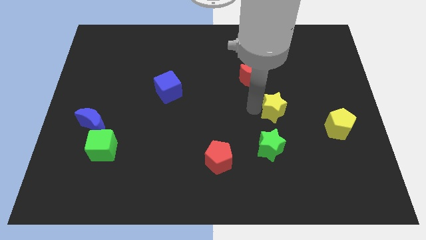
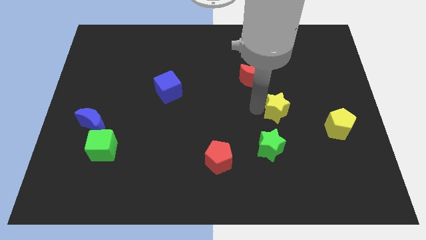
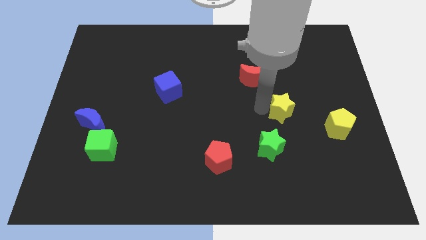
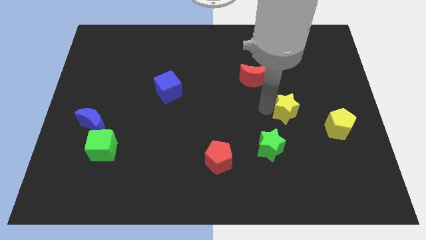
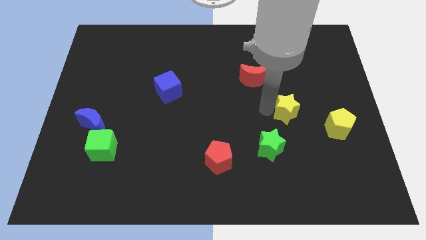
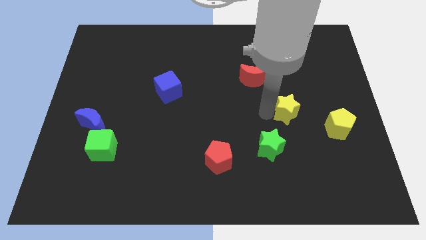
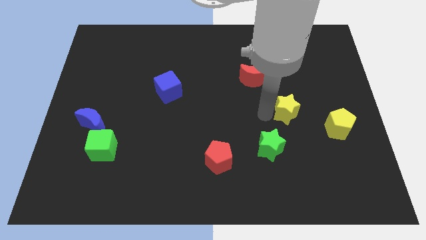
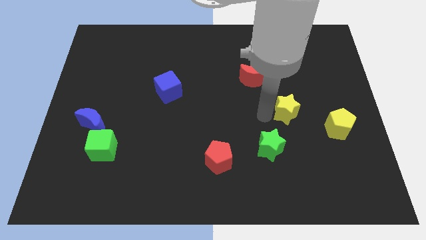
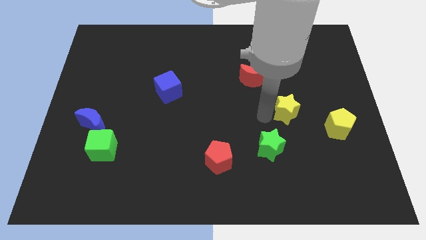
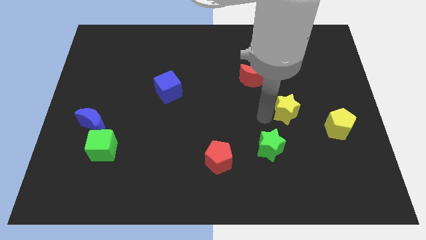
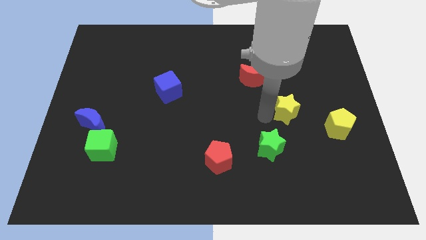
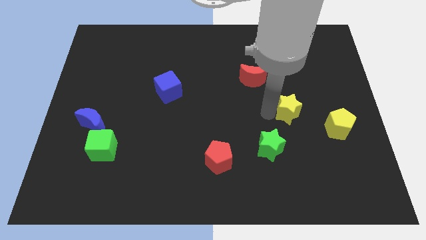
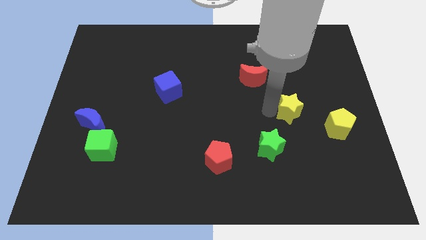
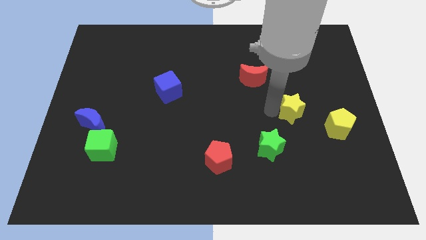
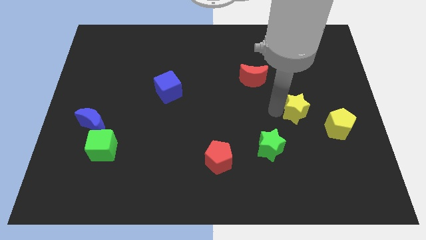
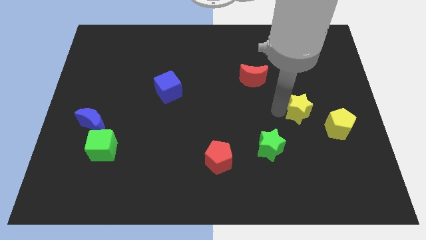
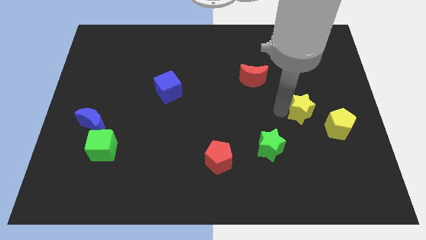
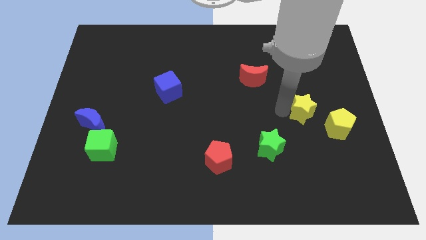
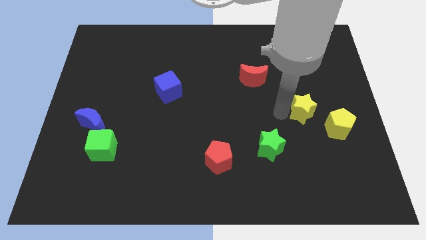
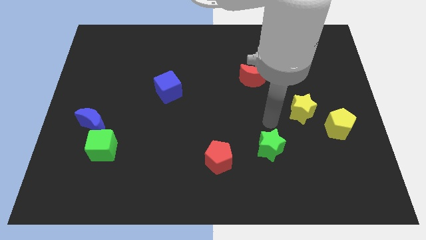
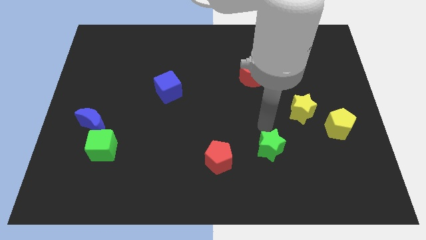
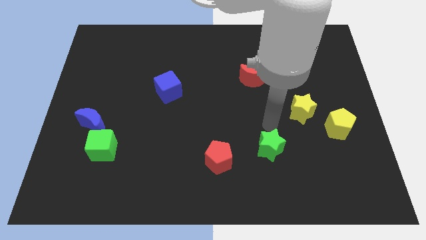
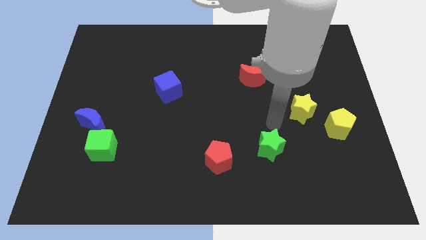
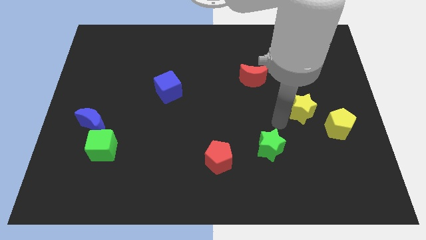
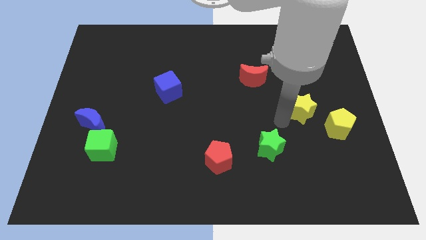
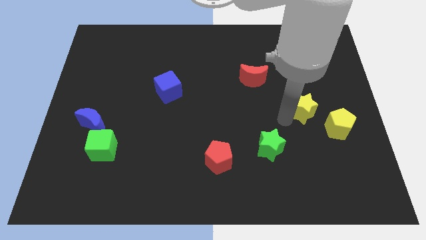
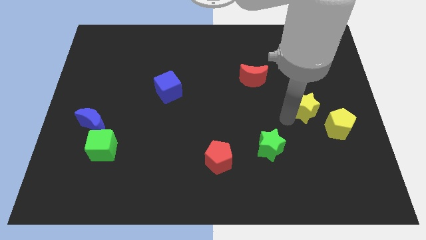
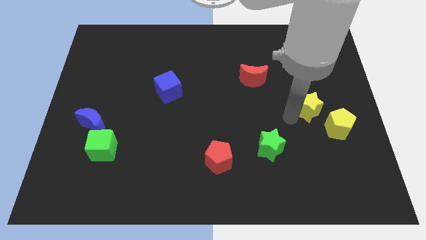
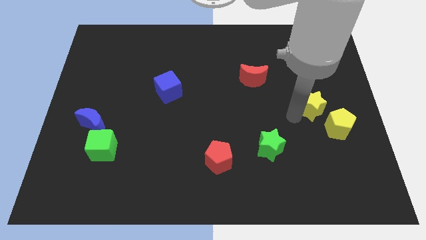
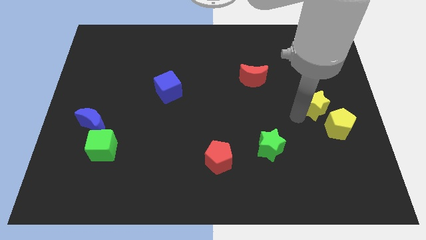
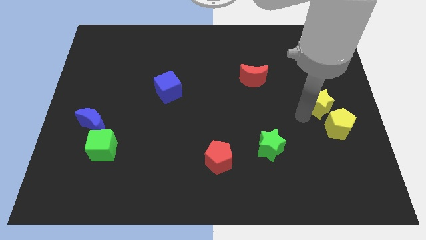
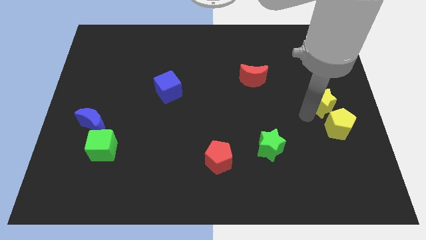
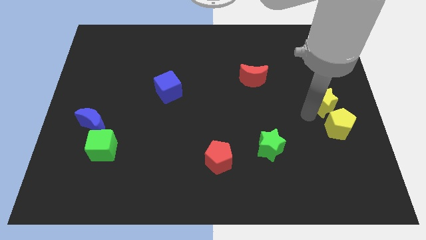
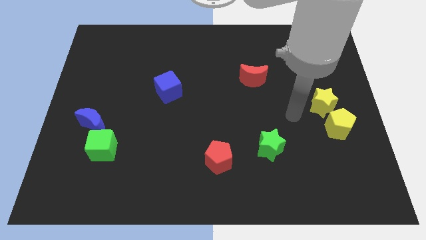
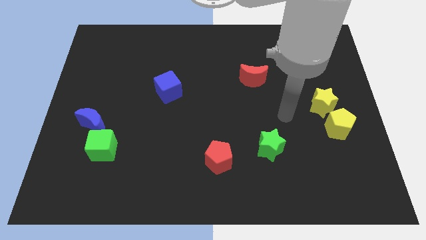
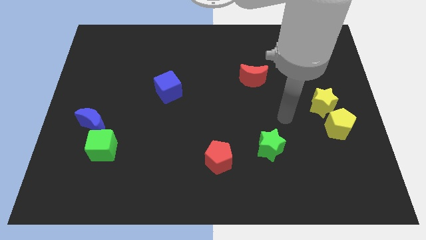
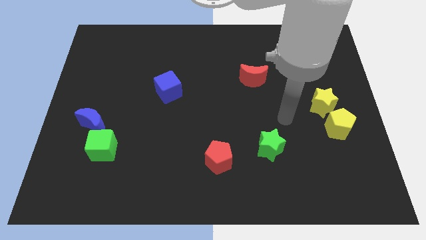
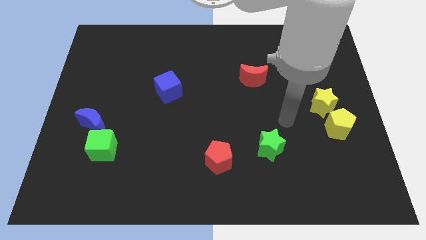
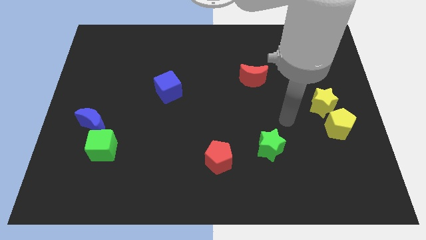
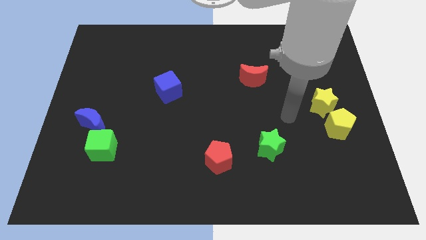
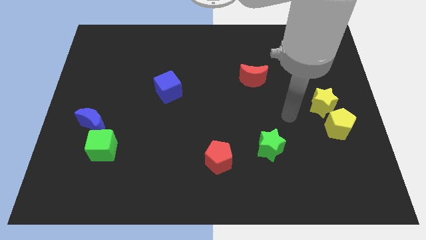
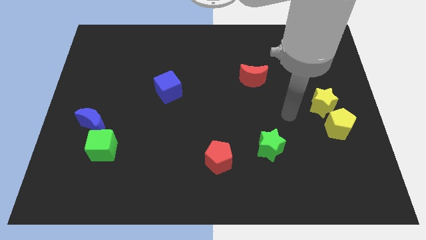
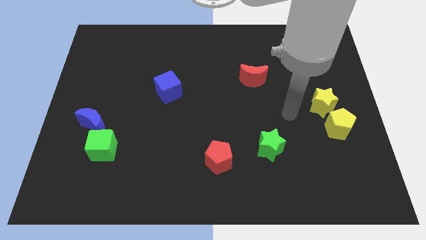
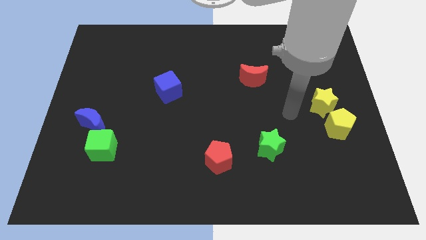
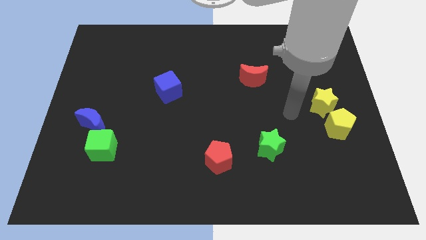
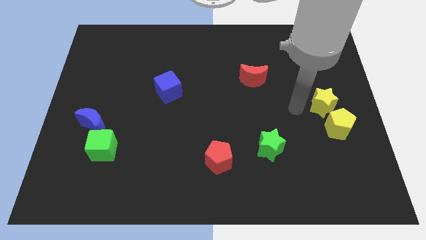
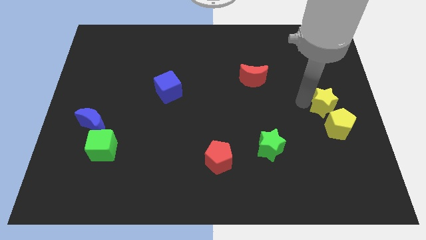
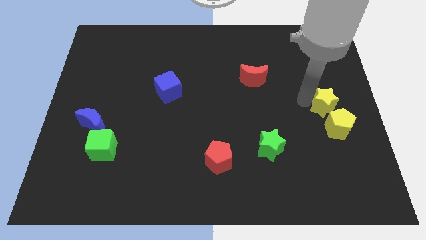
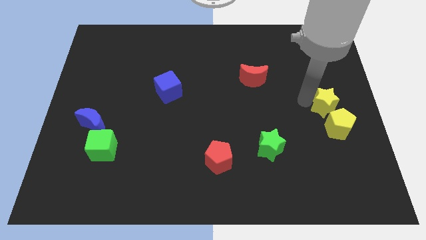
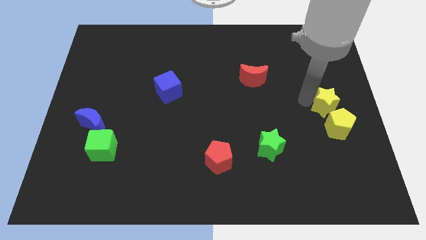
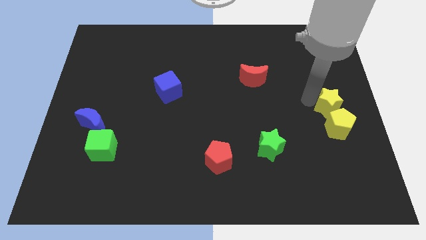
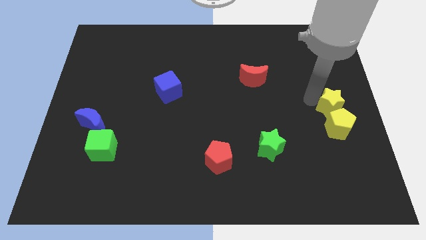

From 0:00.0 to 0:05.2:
push the yellow star to the top of the yellow pentagon

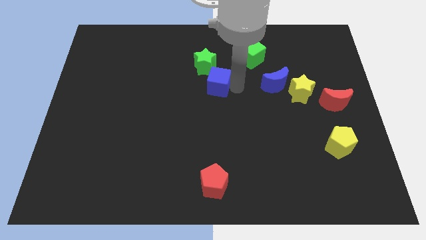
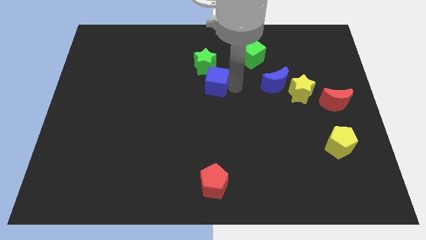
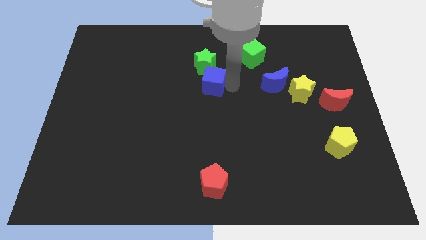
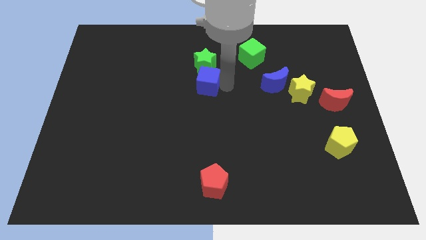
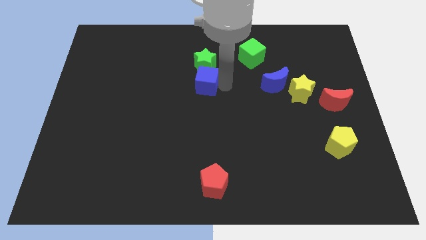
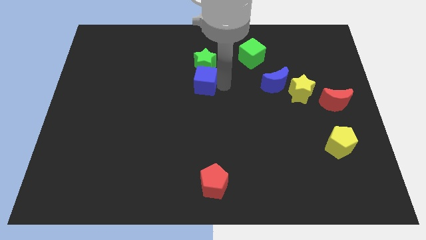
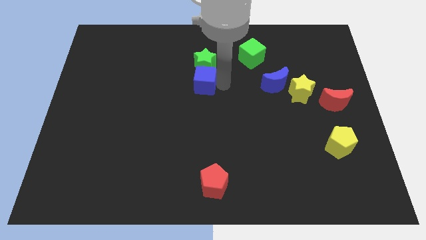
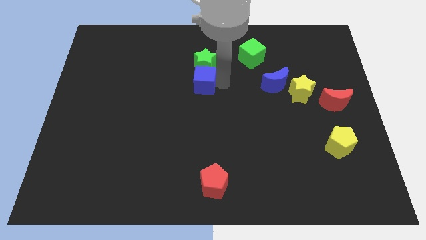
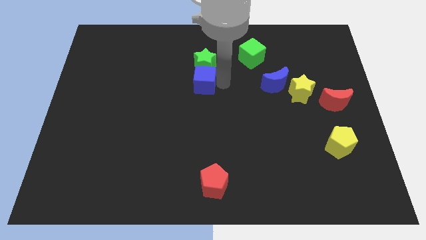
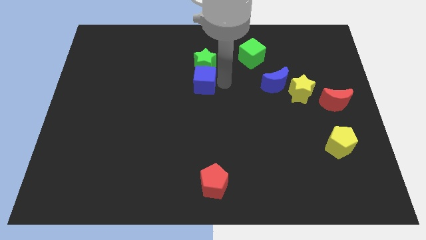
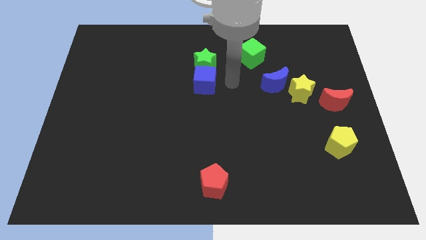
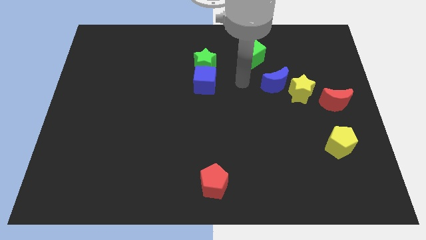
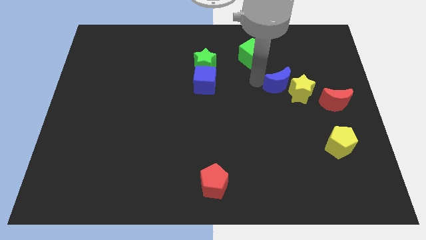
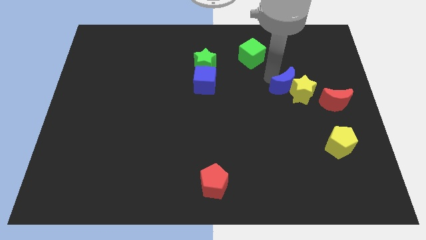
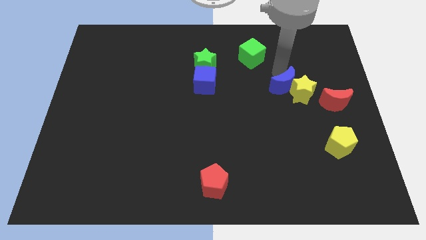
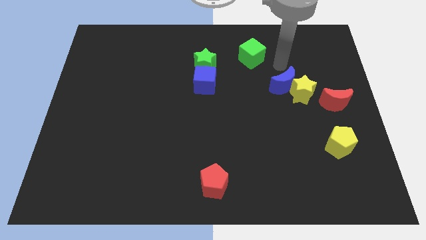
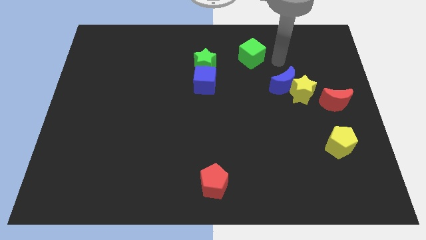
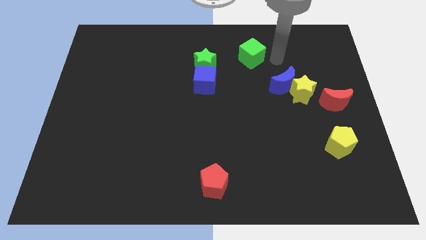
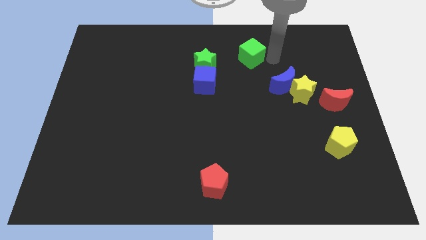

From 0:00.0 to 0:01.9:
push the blue moon into the yellow star

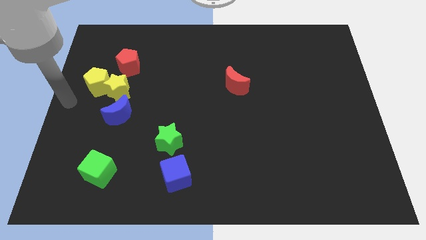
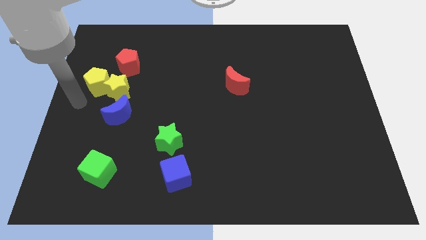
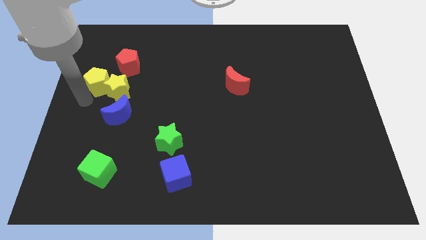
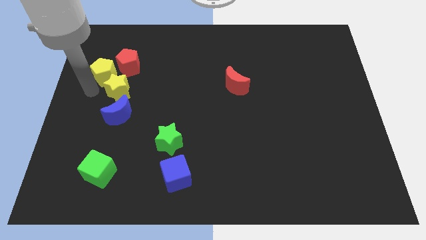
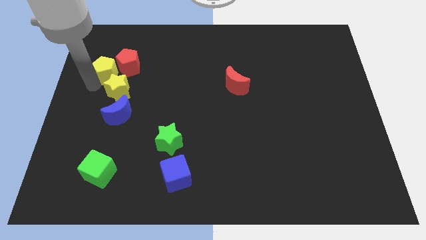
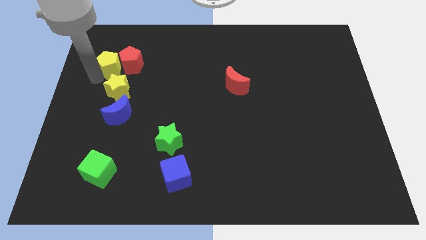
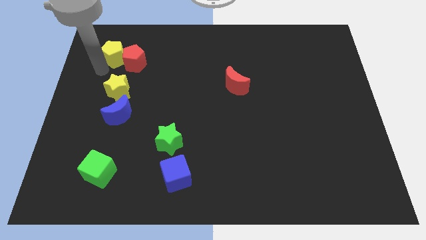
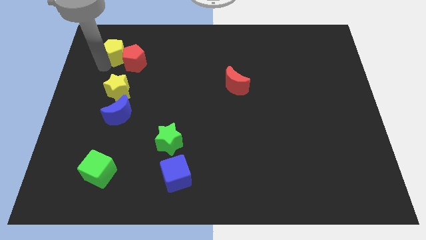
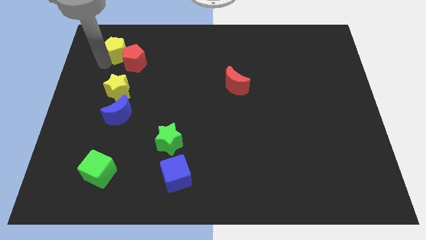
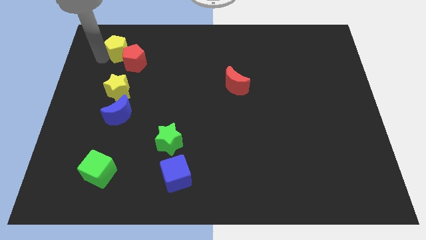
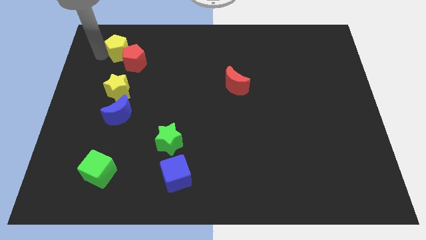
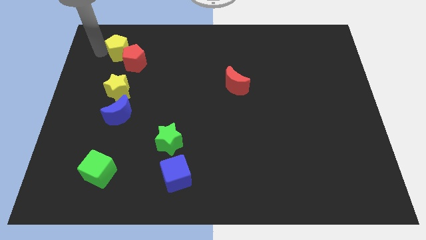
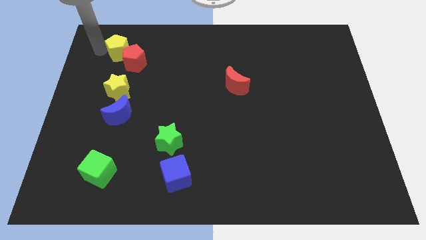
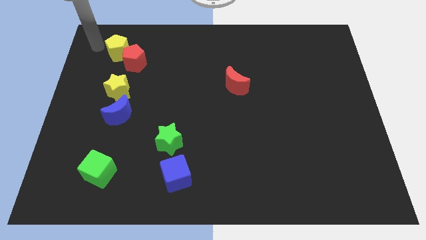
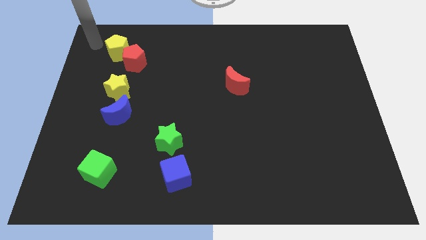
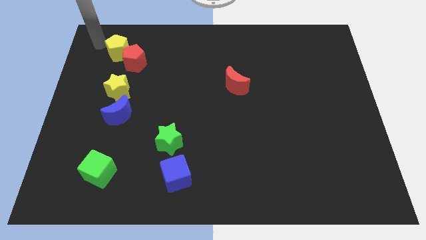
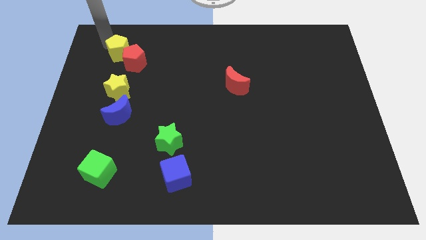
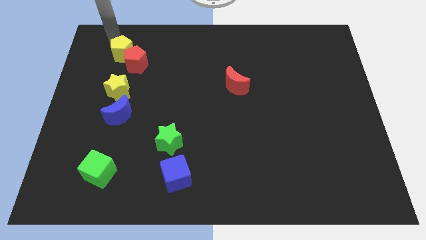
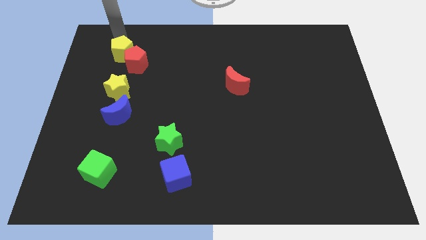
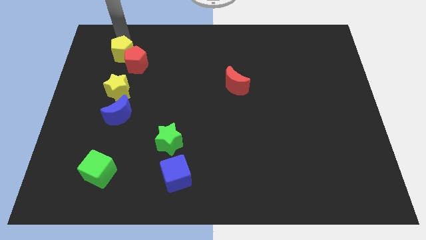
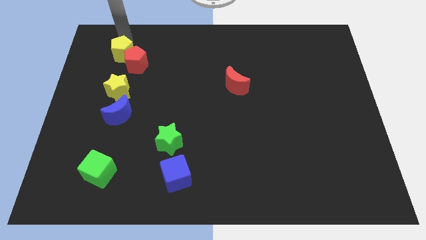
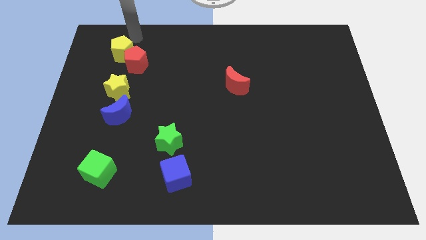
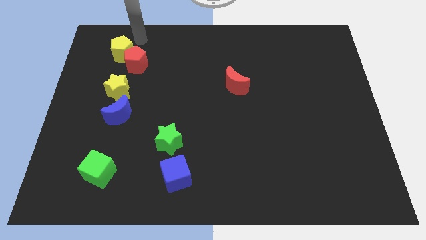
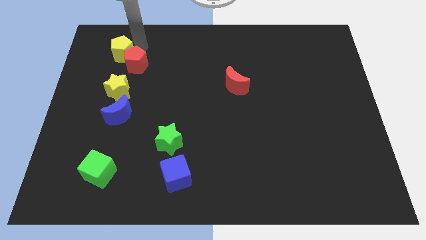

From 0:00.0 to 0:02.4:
push the yellow pentagon into the red pentagon
